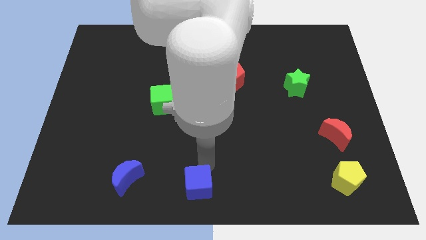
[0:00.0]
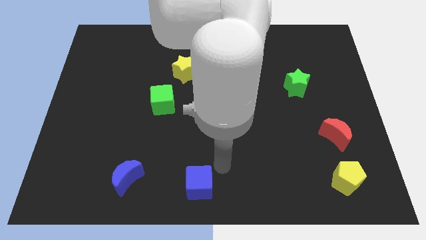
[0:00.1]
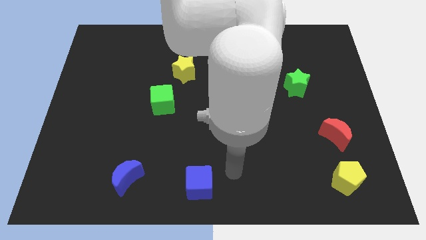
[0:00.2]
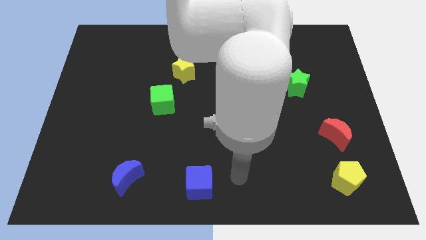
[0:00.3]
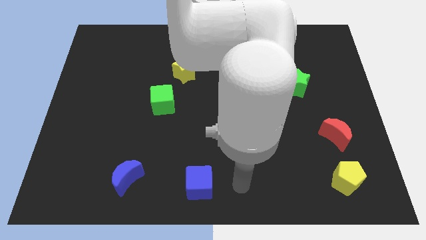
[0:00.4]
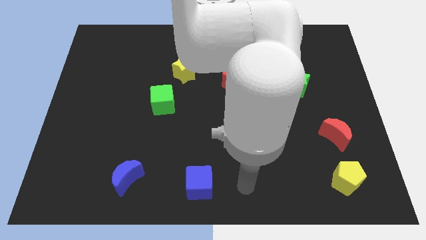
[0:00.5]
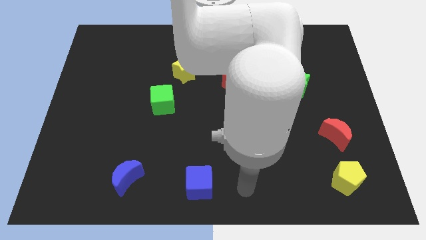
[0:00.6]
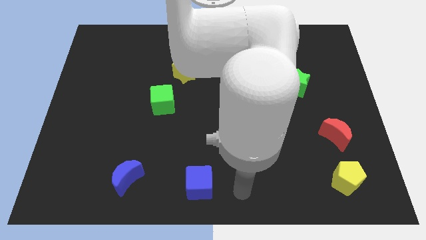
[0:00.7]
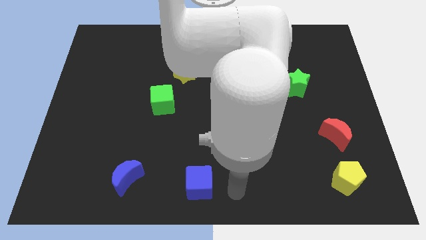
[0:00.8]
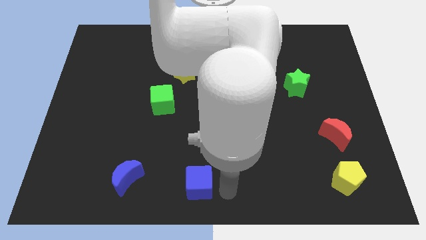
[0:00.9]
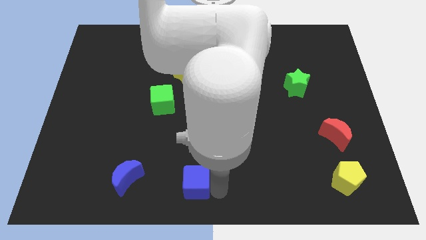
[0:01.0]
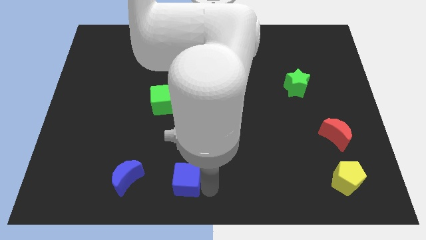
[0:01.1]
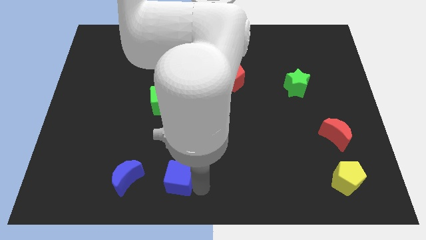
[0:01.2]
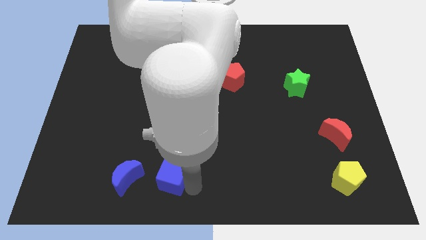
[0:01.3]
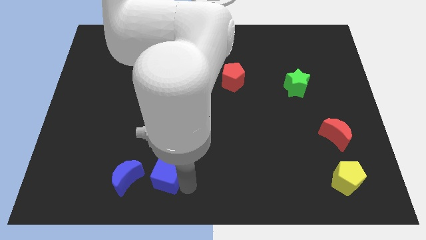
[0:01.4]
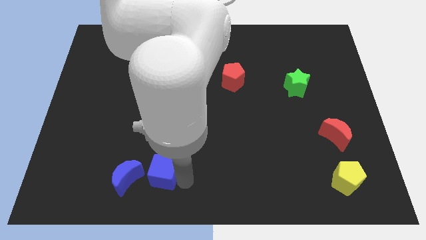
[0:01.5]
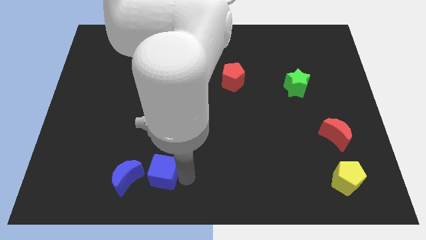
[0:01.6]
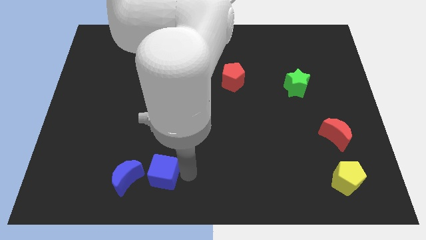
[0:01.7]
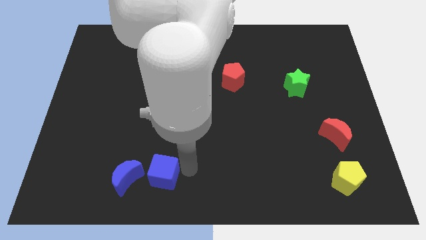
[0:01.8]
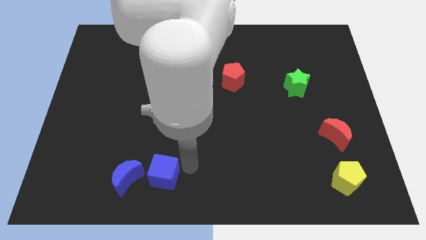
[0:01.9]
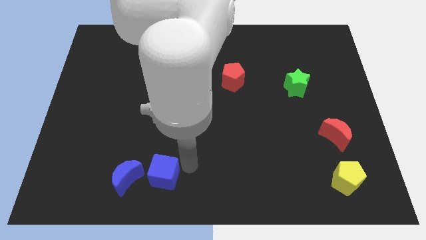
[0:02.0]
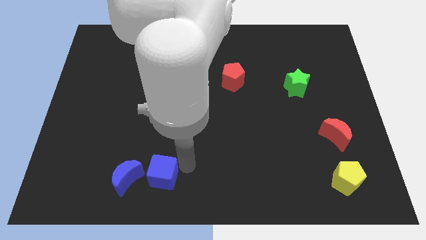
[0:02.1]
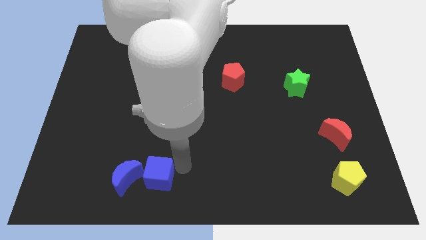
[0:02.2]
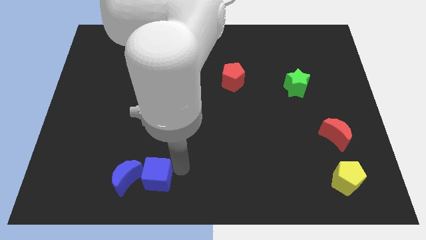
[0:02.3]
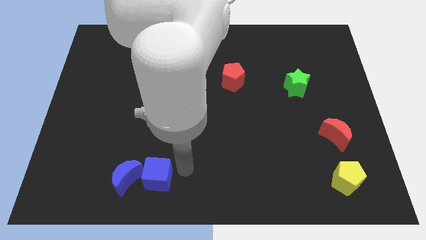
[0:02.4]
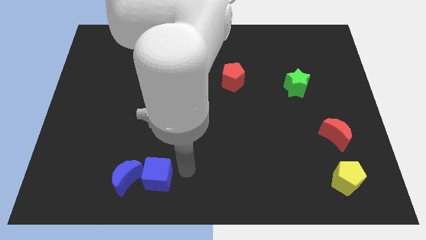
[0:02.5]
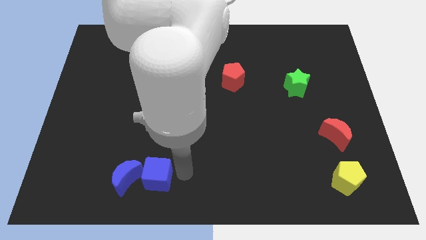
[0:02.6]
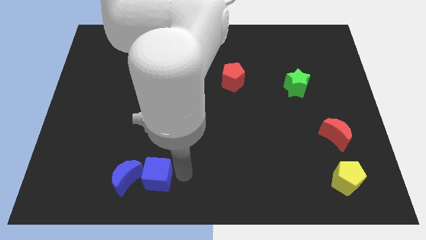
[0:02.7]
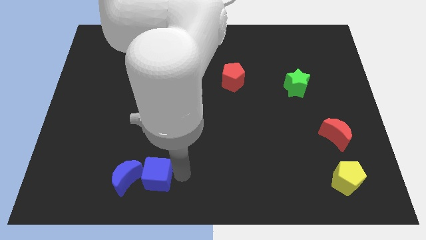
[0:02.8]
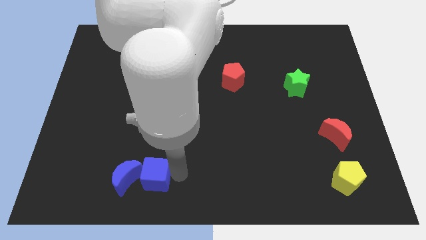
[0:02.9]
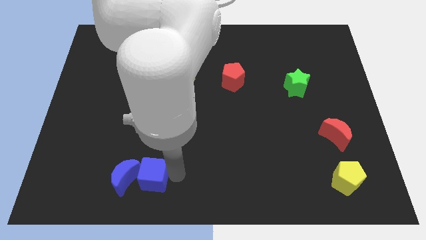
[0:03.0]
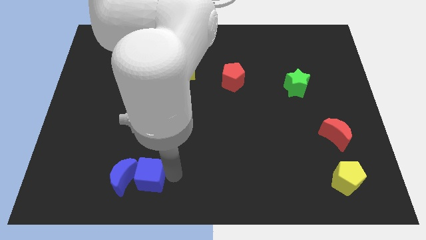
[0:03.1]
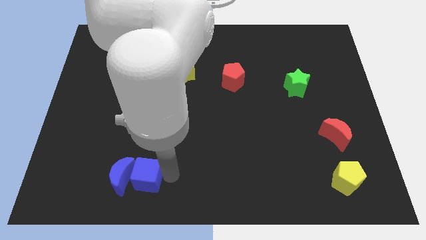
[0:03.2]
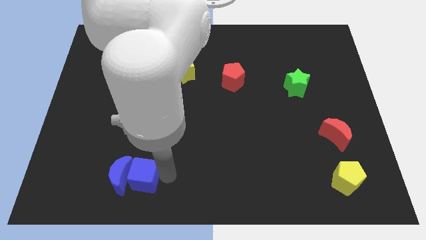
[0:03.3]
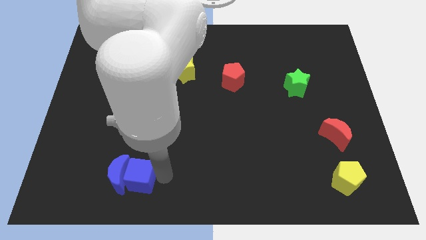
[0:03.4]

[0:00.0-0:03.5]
move the blue cube into the blue moon

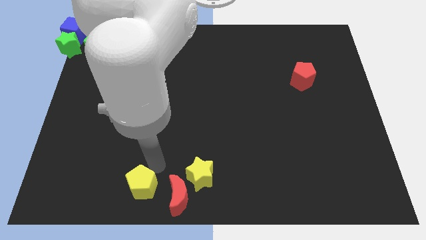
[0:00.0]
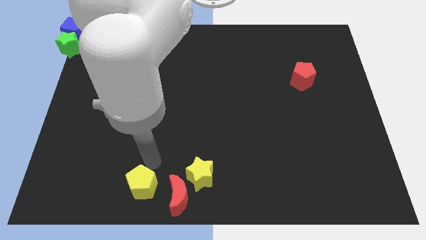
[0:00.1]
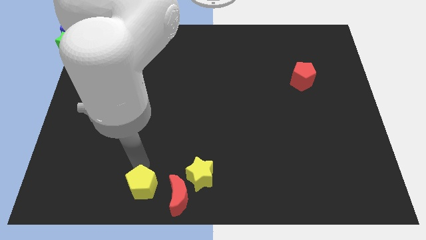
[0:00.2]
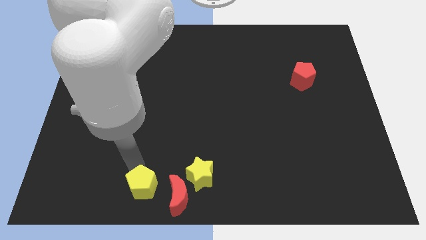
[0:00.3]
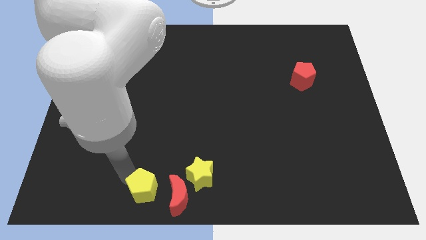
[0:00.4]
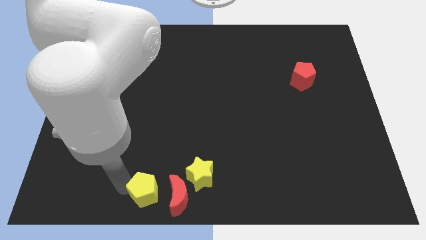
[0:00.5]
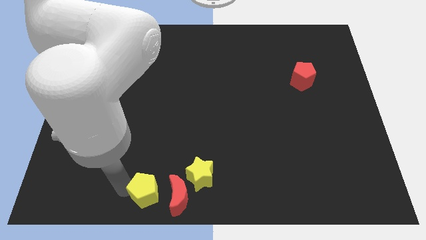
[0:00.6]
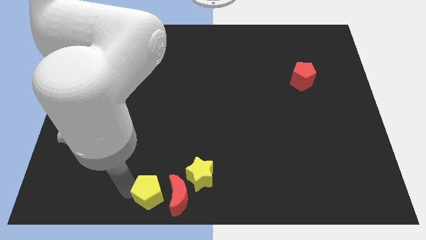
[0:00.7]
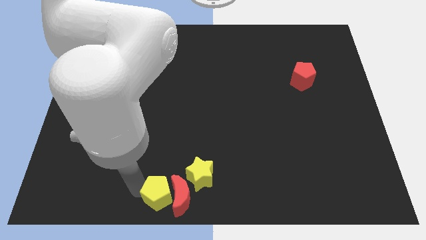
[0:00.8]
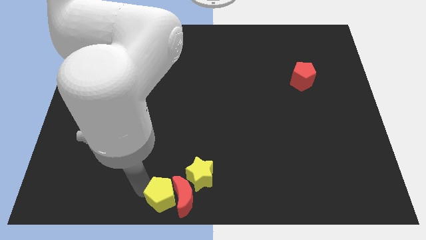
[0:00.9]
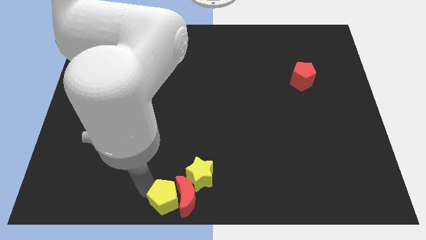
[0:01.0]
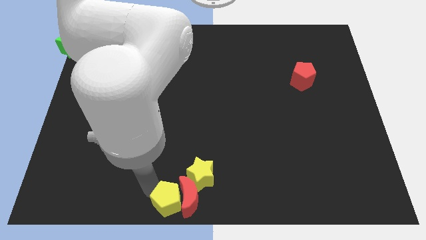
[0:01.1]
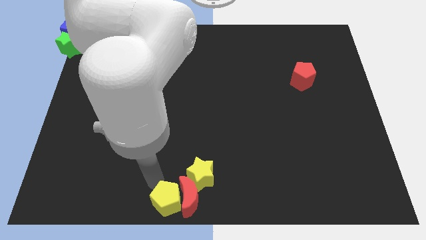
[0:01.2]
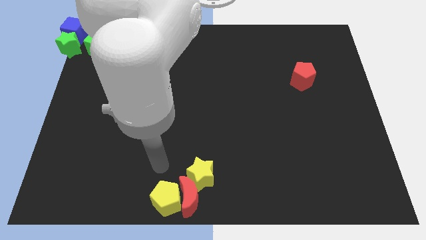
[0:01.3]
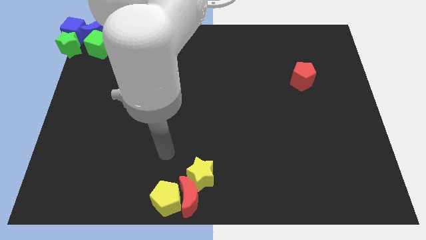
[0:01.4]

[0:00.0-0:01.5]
push the yellow pentagon into the red crescent

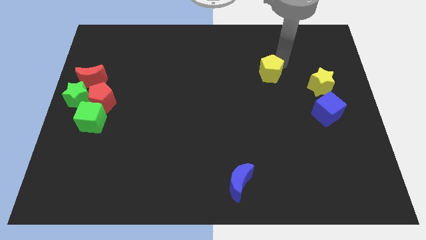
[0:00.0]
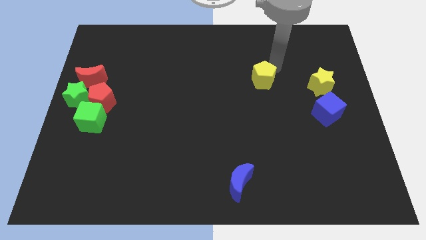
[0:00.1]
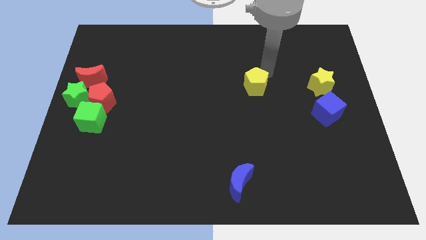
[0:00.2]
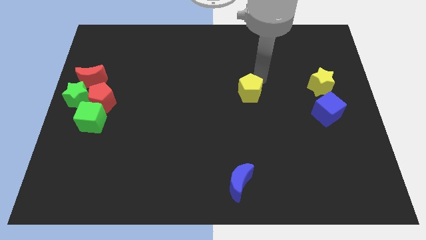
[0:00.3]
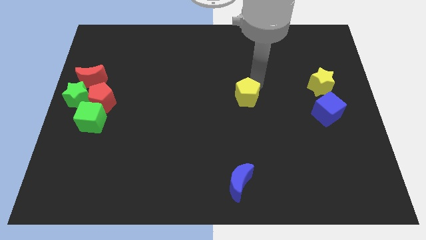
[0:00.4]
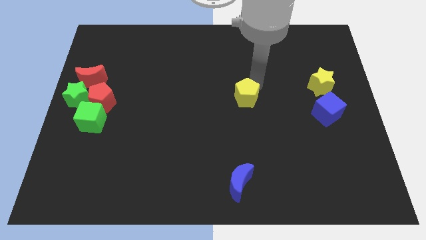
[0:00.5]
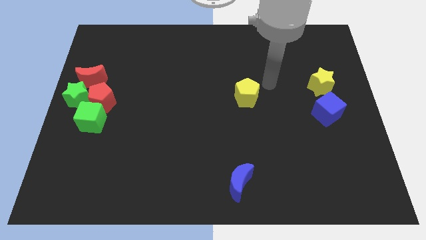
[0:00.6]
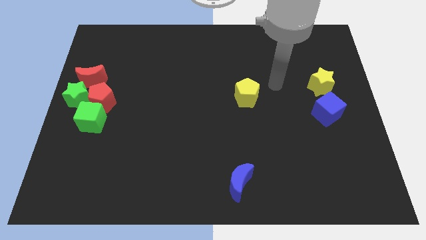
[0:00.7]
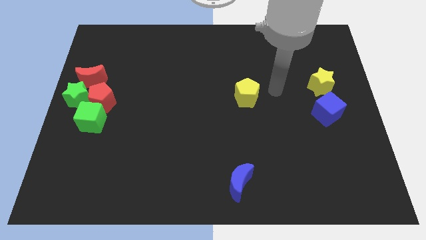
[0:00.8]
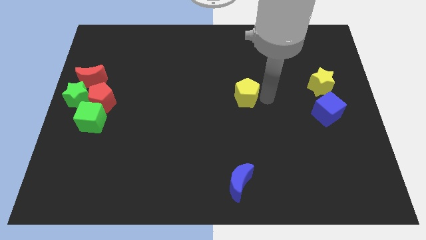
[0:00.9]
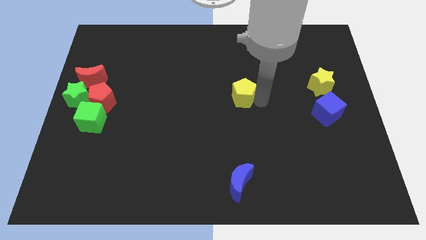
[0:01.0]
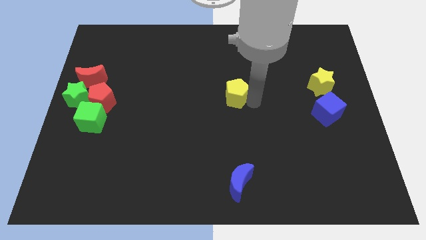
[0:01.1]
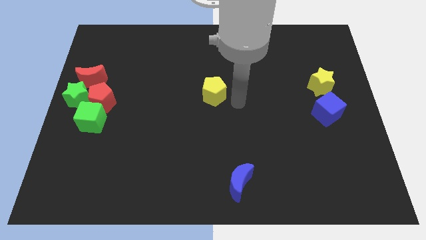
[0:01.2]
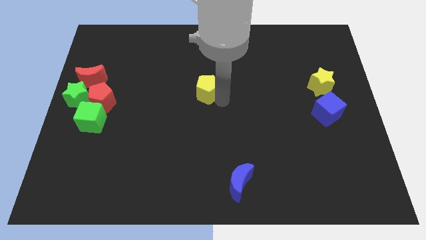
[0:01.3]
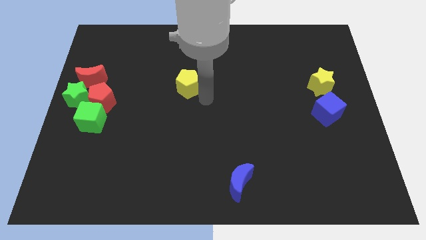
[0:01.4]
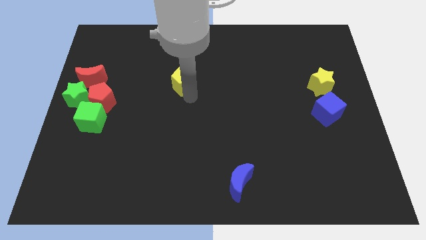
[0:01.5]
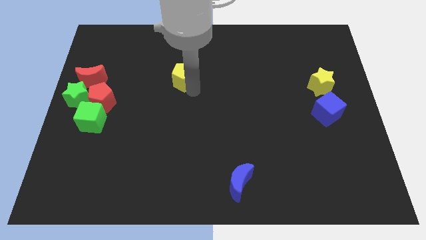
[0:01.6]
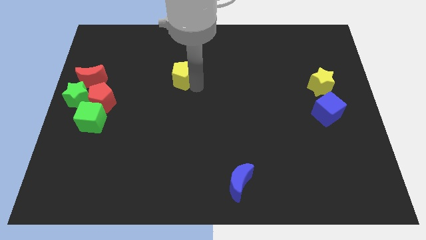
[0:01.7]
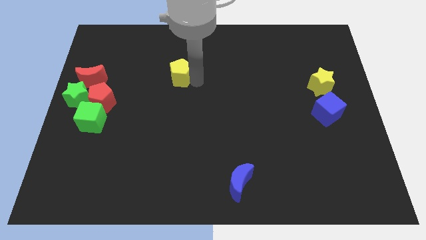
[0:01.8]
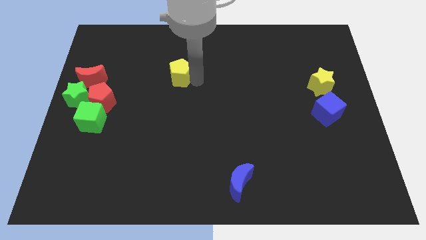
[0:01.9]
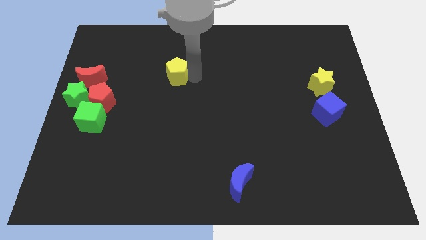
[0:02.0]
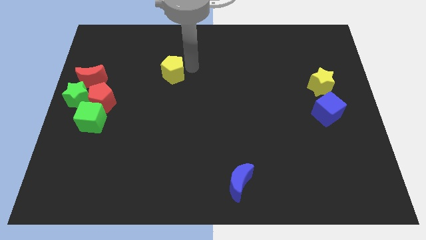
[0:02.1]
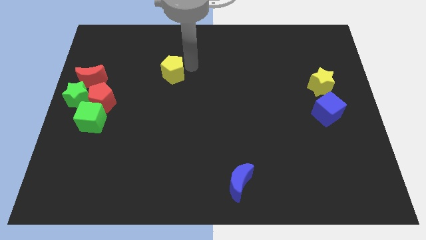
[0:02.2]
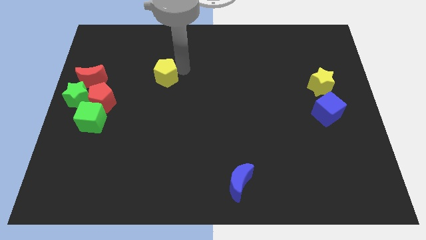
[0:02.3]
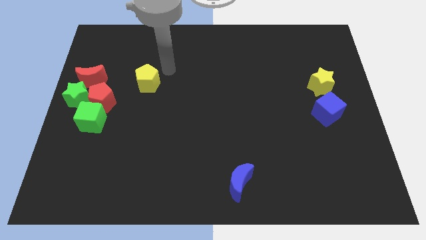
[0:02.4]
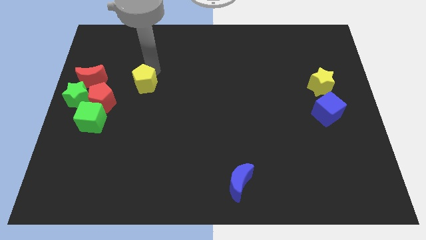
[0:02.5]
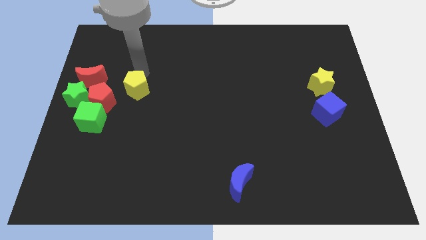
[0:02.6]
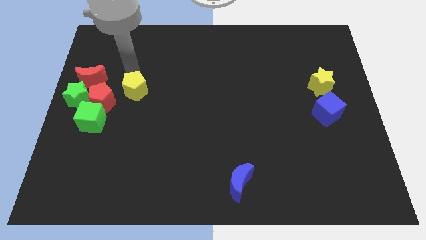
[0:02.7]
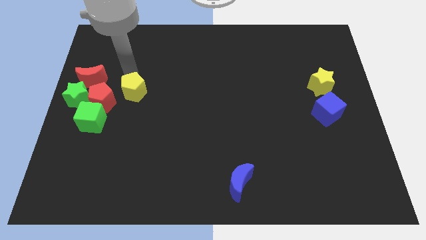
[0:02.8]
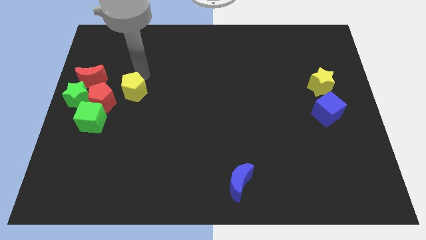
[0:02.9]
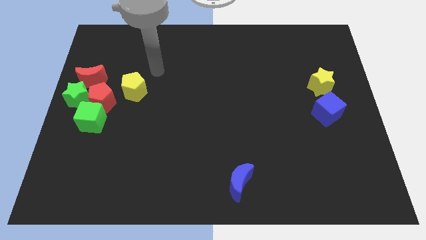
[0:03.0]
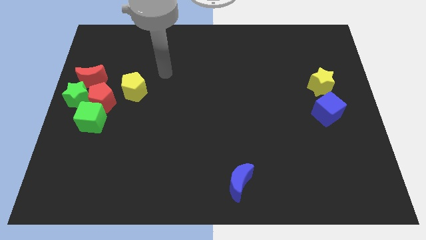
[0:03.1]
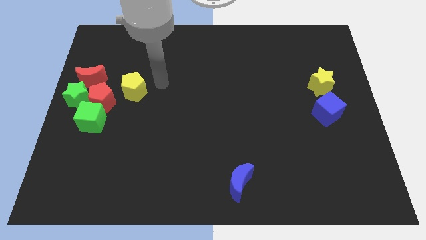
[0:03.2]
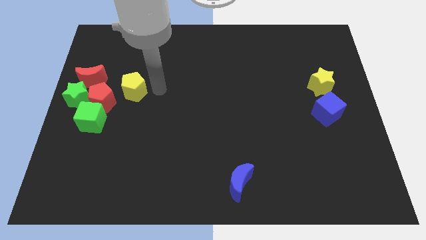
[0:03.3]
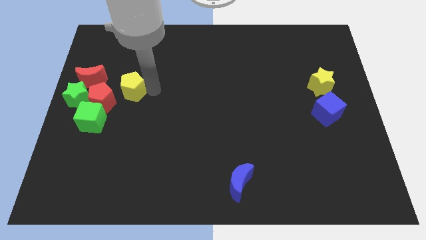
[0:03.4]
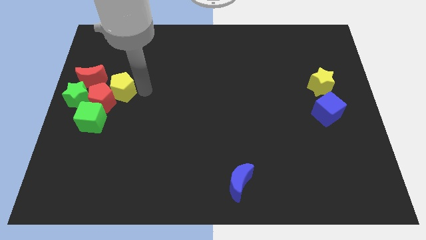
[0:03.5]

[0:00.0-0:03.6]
move the yellow pentagon close to the red pentagon

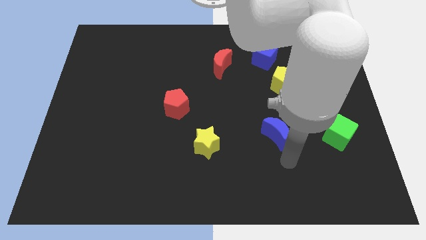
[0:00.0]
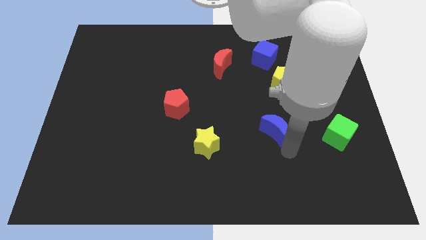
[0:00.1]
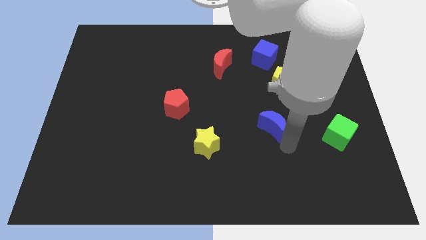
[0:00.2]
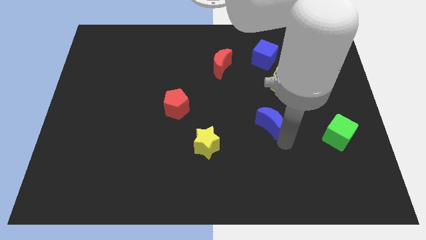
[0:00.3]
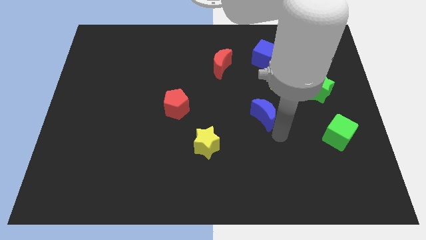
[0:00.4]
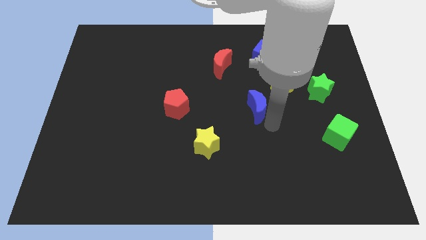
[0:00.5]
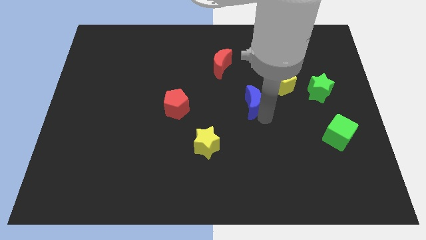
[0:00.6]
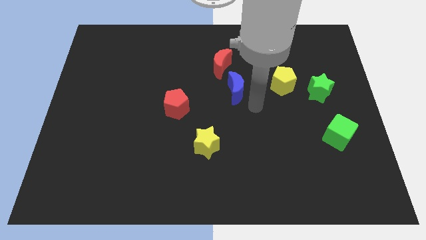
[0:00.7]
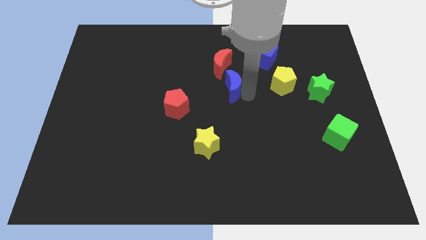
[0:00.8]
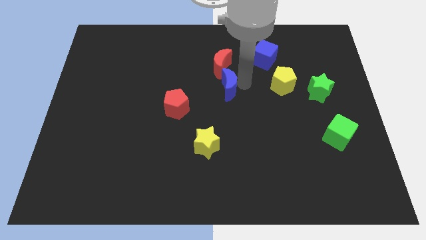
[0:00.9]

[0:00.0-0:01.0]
place the blue crescent below to the red moon
